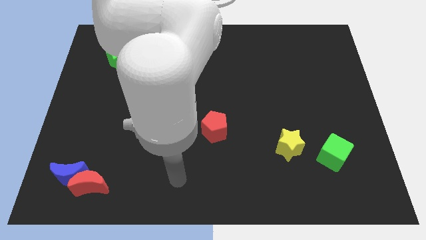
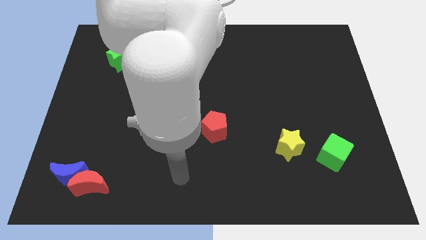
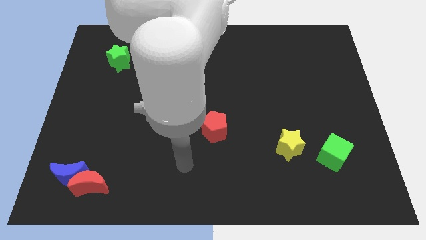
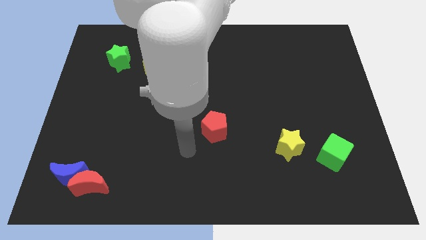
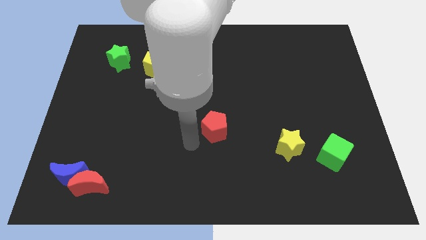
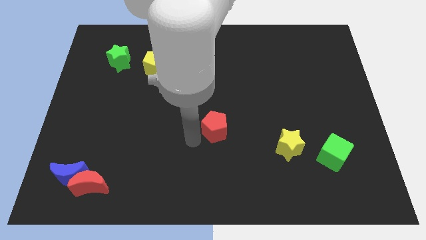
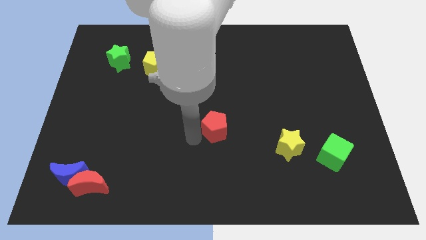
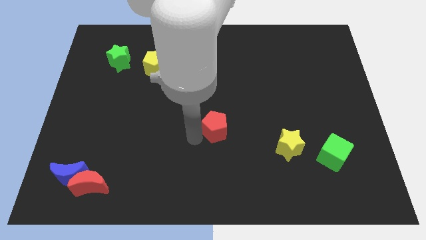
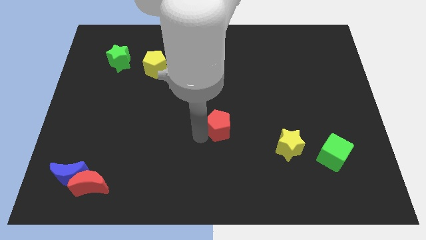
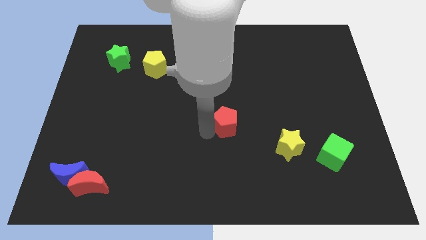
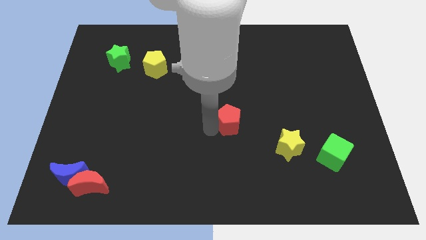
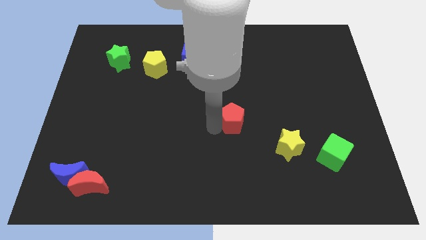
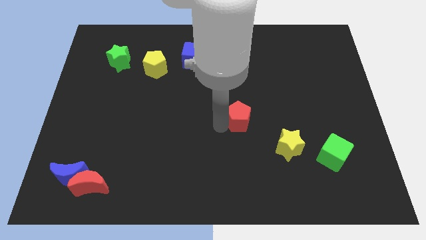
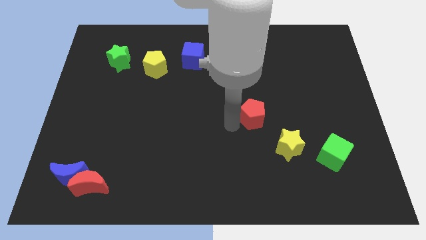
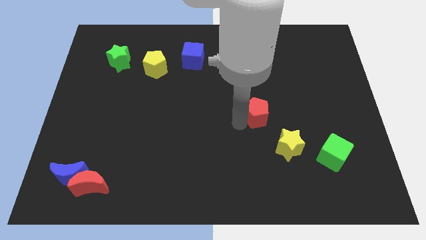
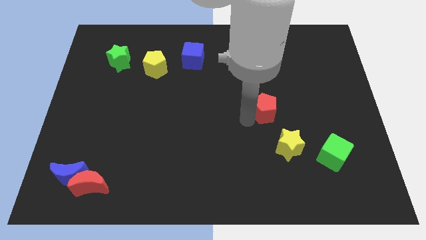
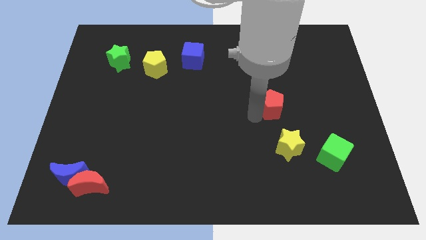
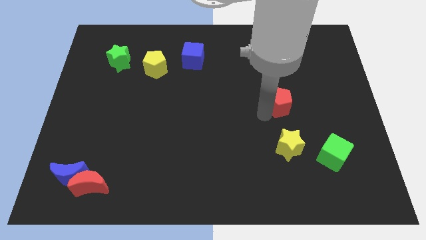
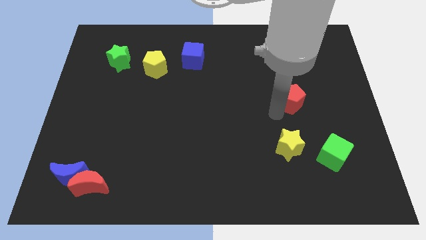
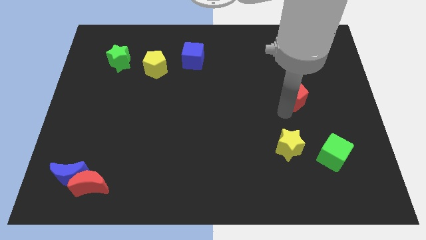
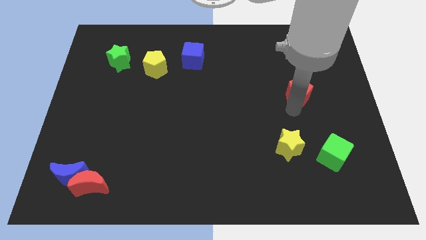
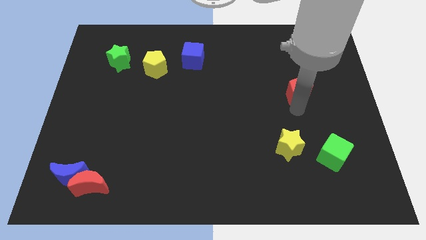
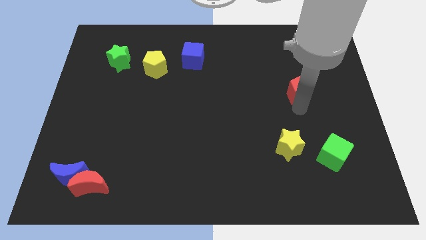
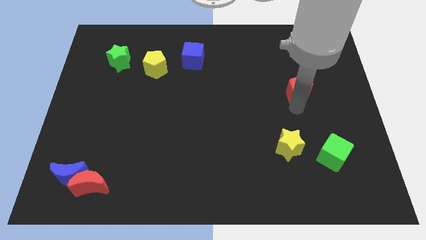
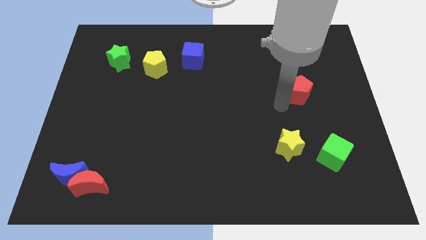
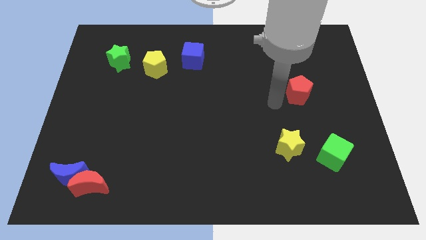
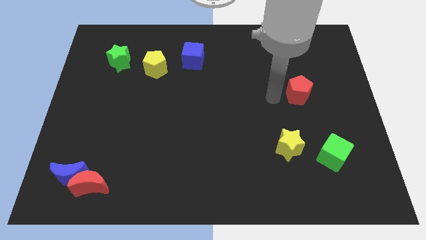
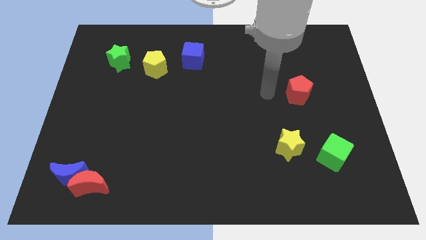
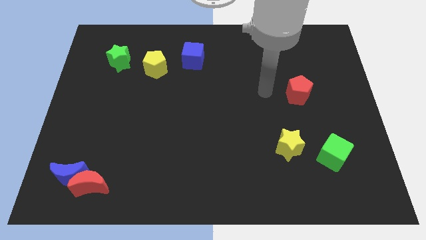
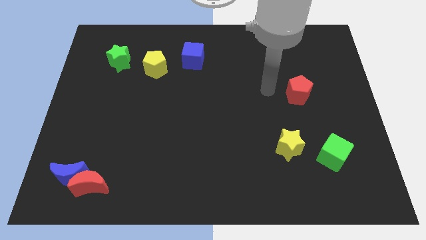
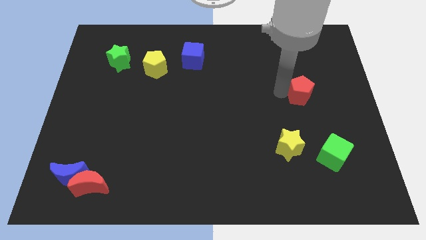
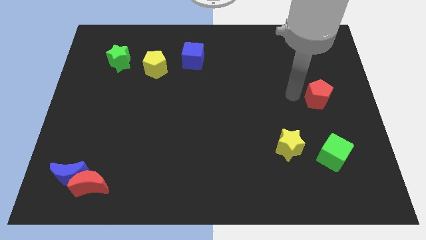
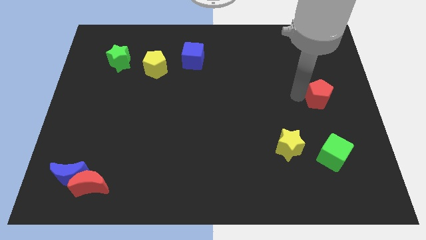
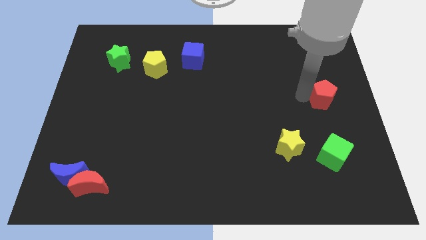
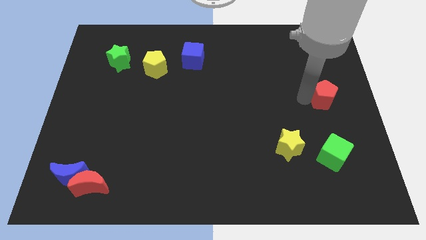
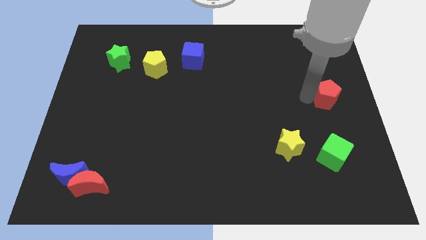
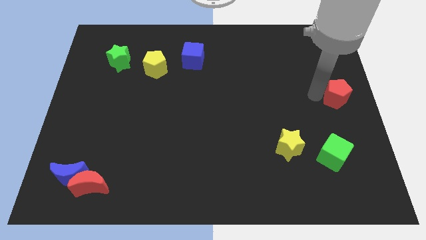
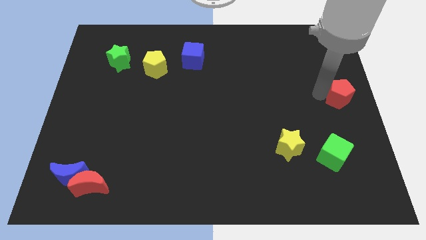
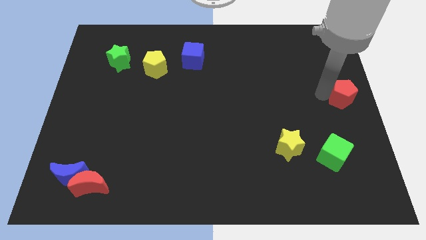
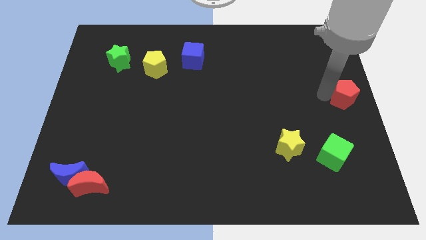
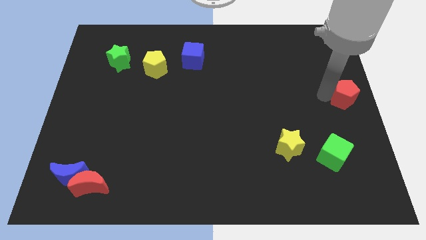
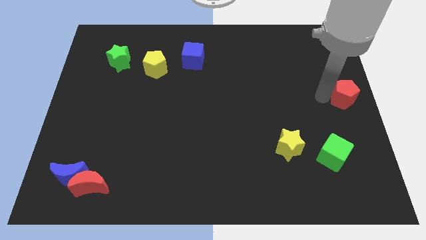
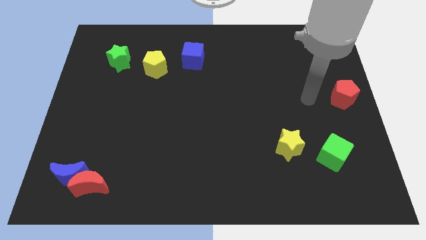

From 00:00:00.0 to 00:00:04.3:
move the red pentagon to the center right of the board

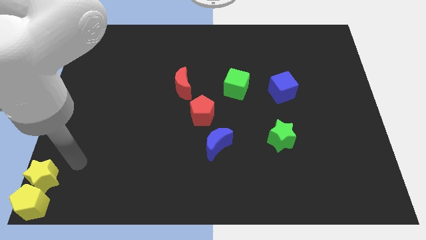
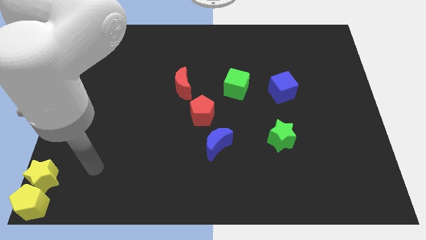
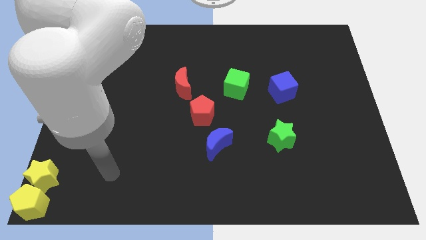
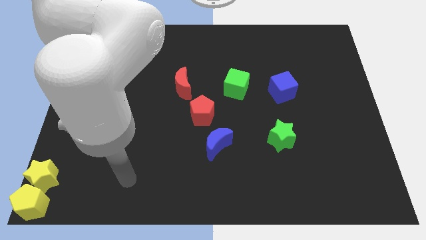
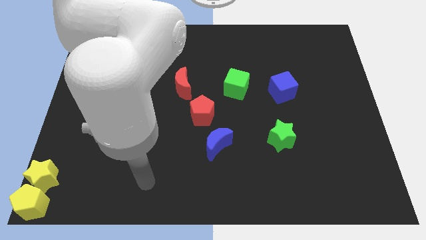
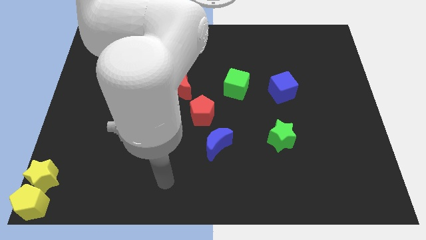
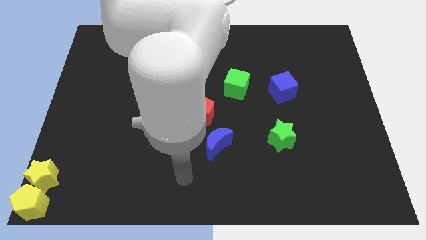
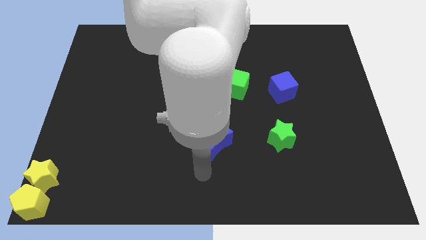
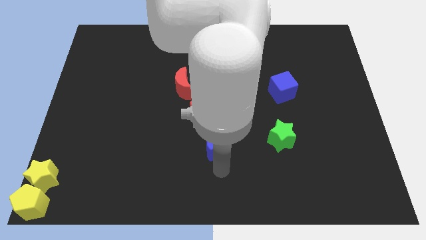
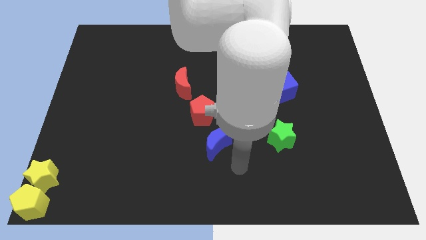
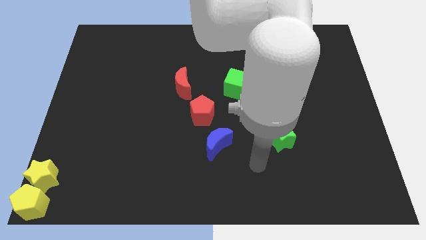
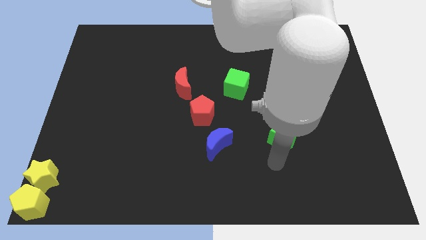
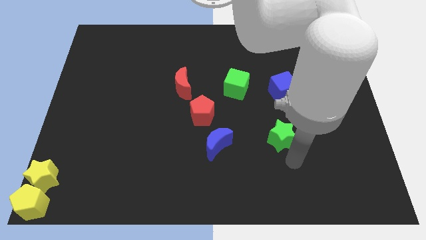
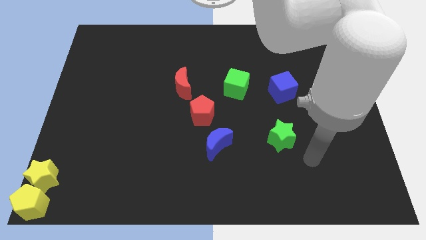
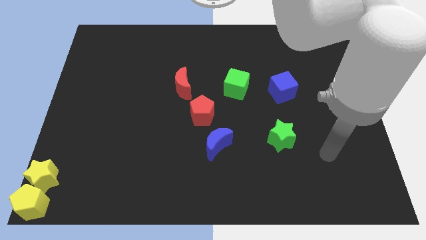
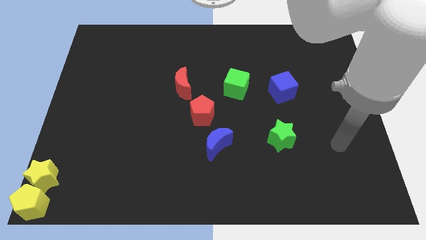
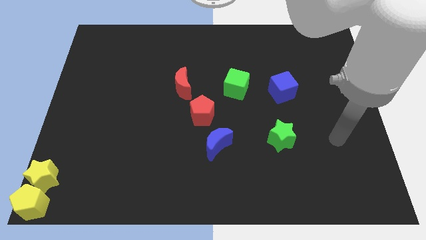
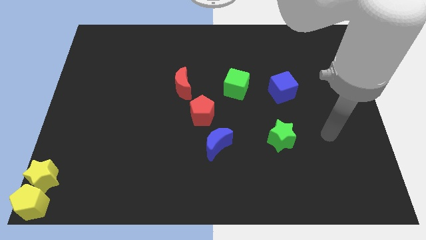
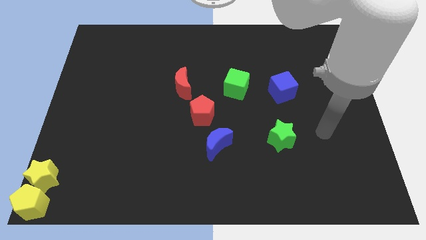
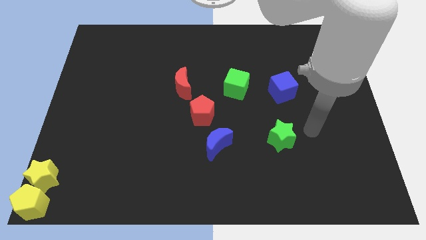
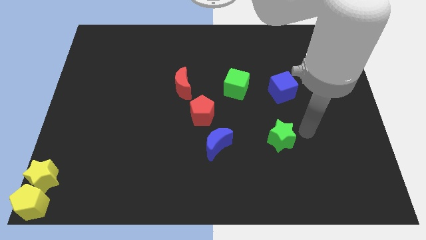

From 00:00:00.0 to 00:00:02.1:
move your arm towards the right of the green star

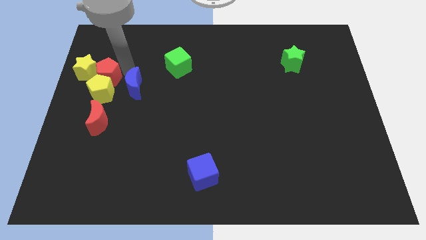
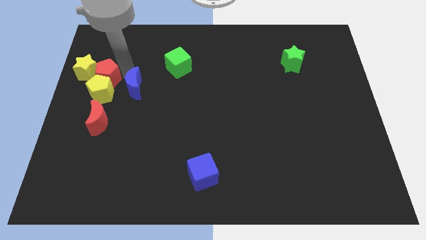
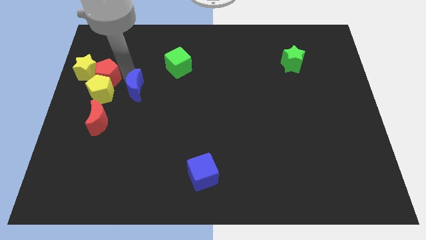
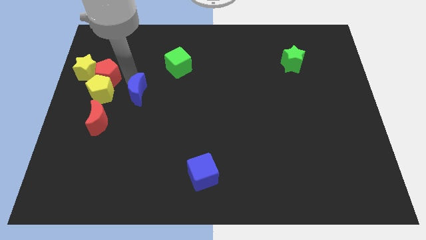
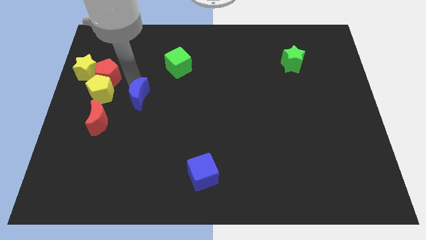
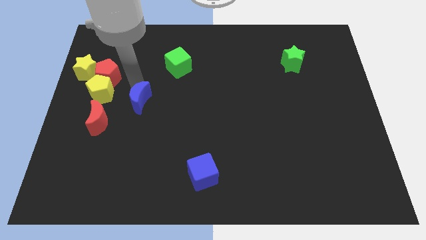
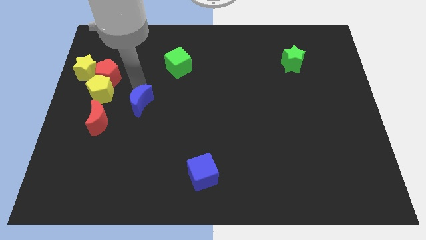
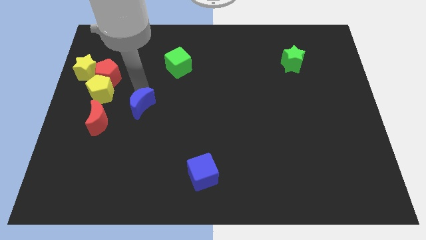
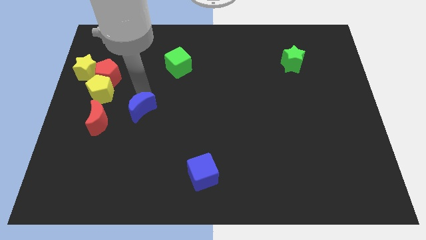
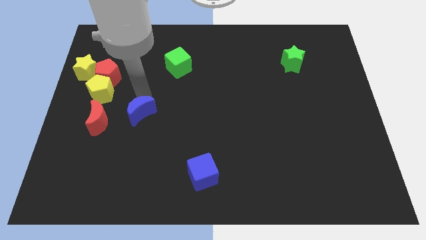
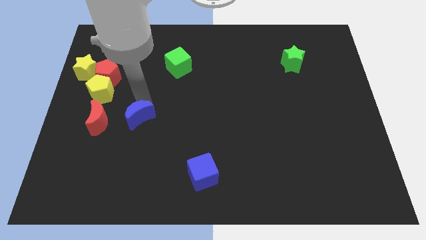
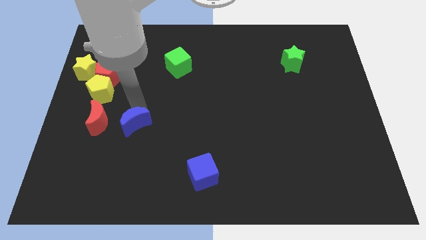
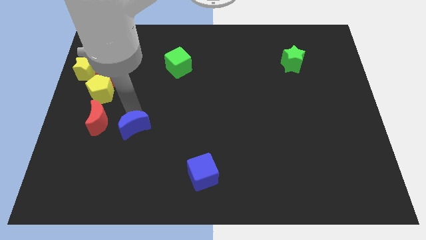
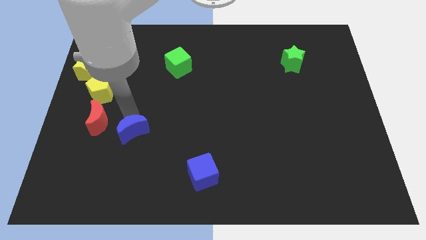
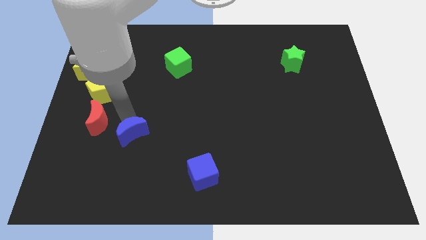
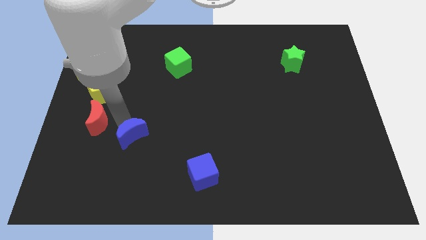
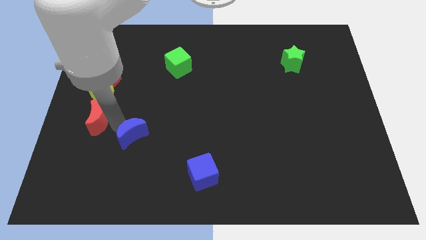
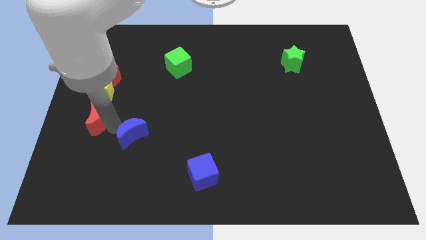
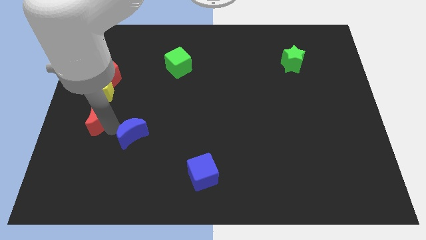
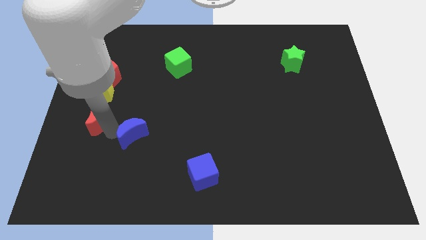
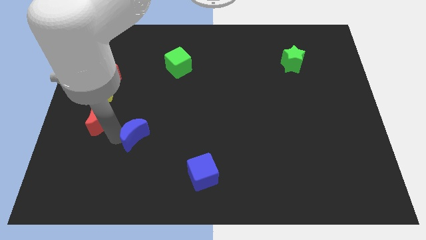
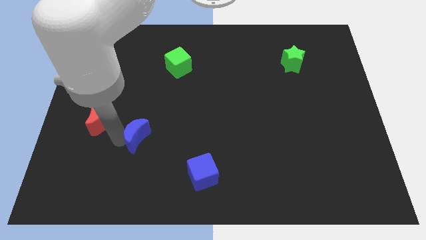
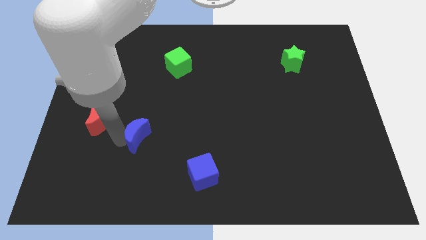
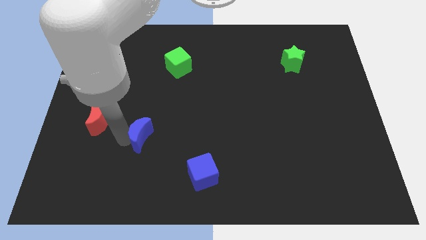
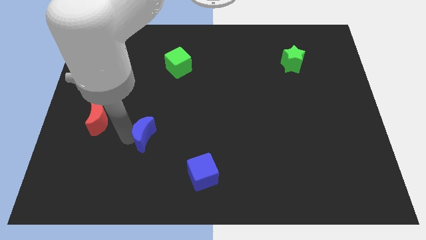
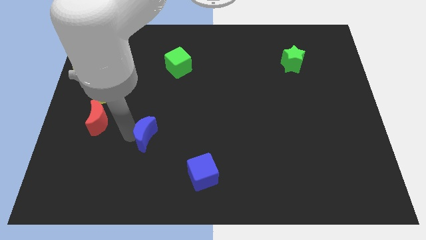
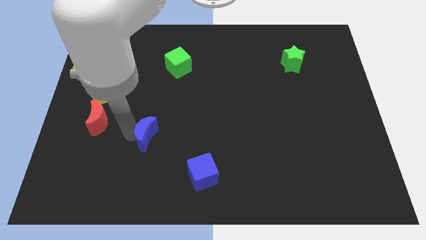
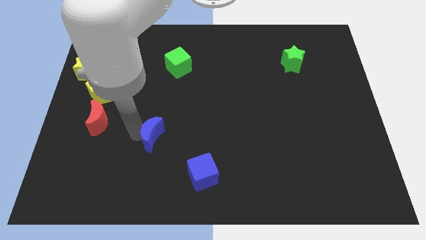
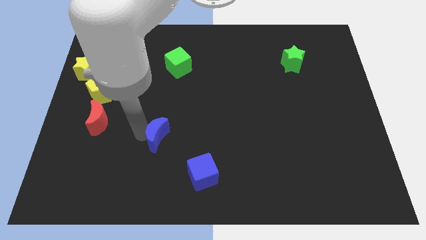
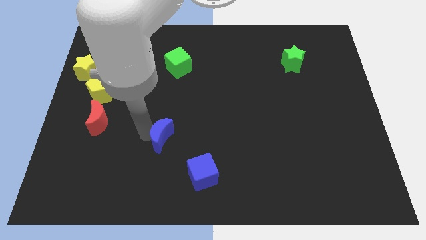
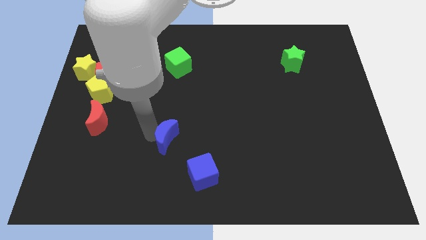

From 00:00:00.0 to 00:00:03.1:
move blue crescent down diagonal to blue cube
